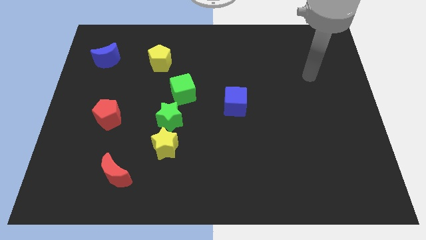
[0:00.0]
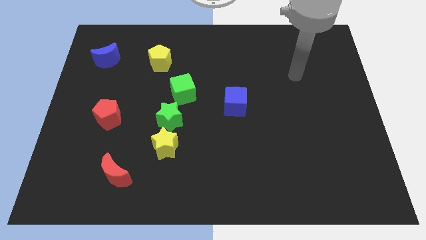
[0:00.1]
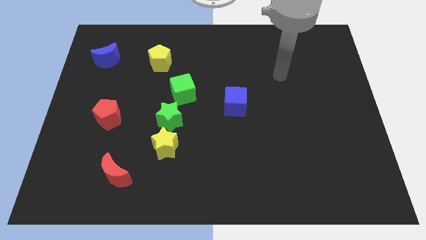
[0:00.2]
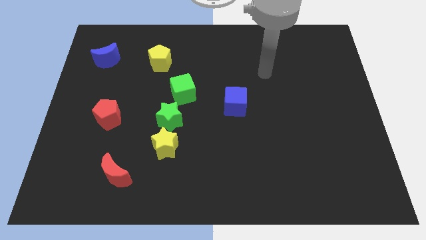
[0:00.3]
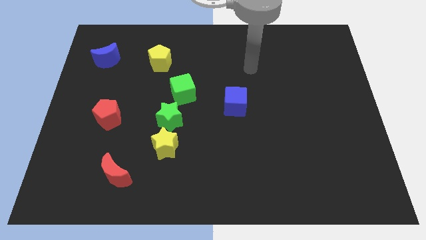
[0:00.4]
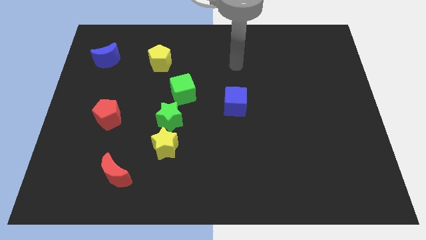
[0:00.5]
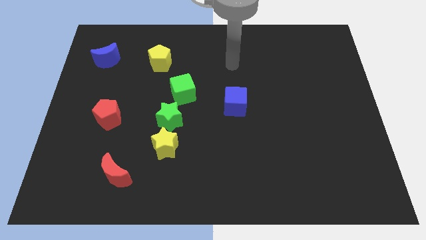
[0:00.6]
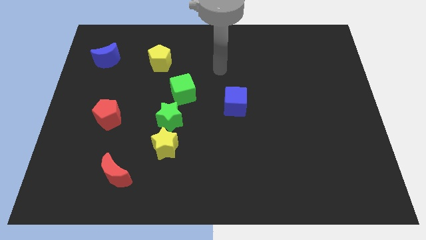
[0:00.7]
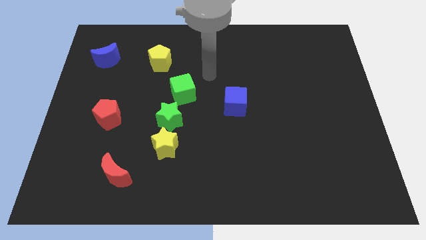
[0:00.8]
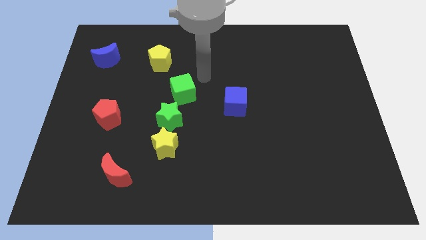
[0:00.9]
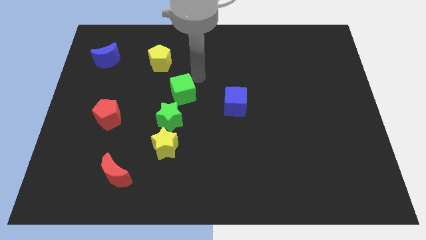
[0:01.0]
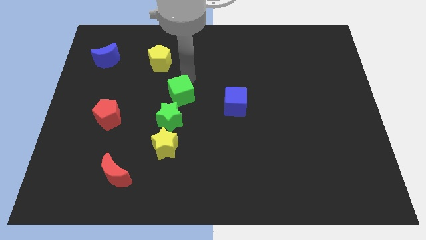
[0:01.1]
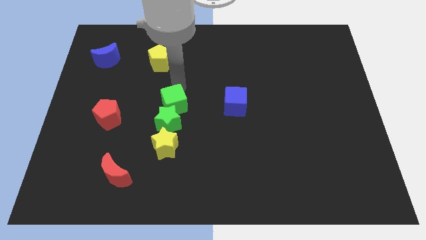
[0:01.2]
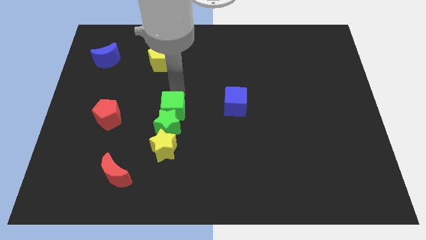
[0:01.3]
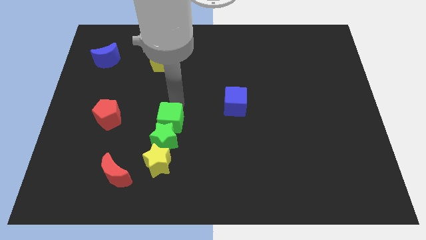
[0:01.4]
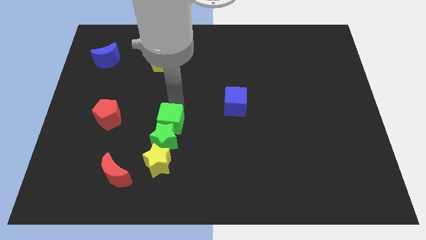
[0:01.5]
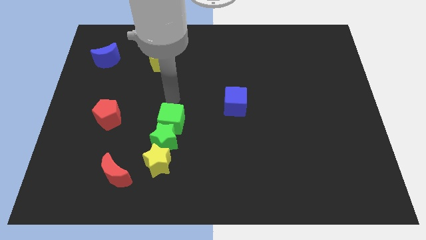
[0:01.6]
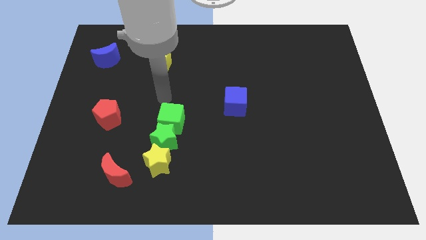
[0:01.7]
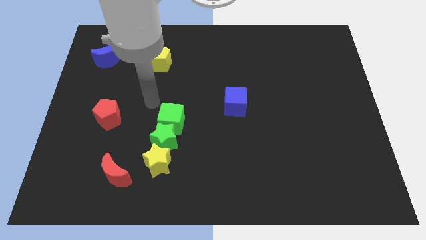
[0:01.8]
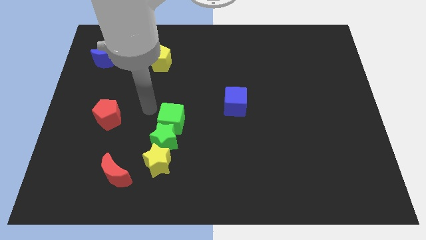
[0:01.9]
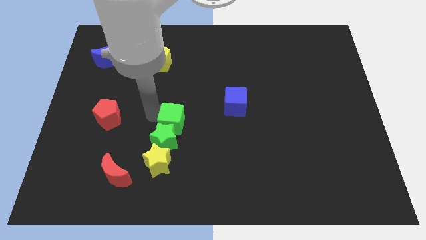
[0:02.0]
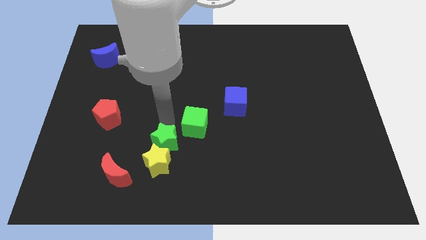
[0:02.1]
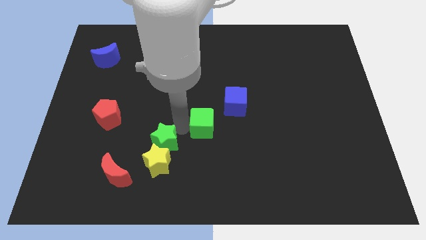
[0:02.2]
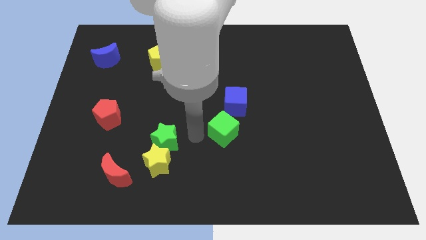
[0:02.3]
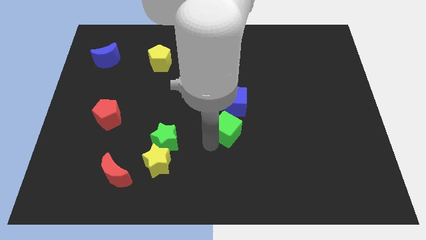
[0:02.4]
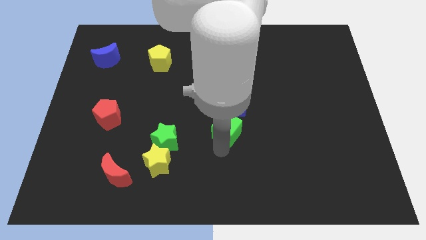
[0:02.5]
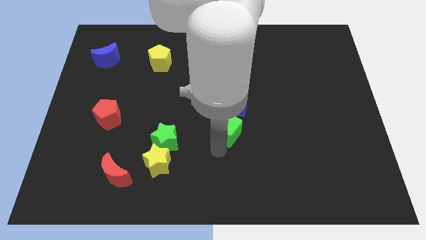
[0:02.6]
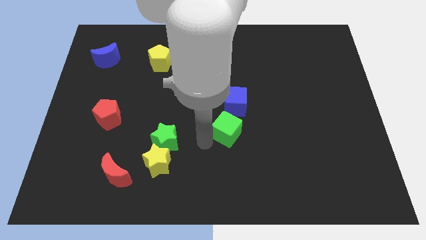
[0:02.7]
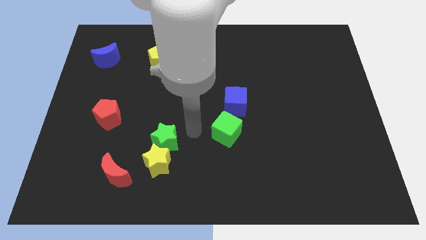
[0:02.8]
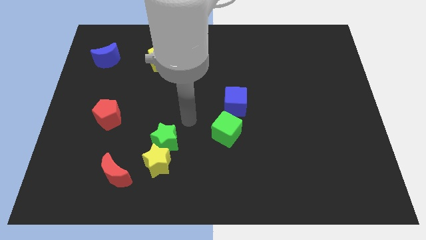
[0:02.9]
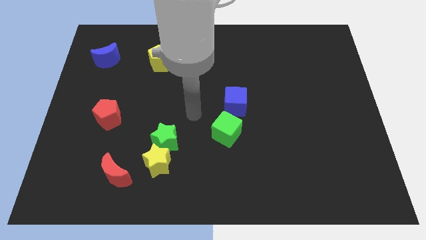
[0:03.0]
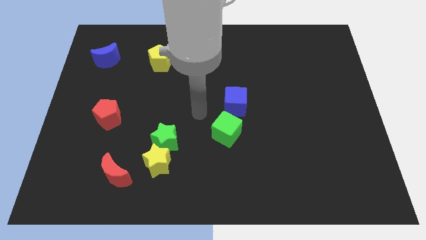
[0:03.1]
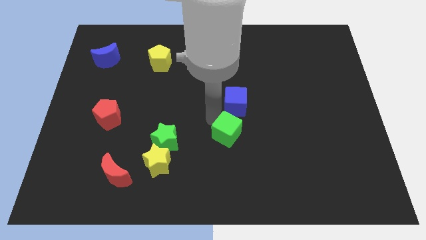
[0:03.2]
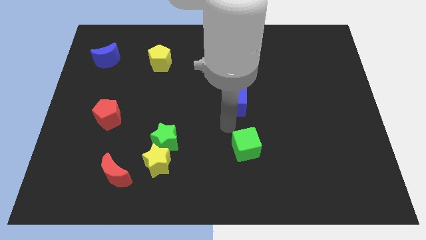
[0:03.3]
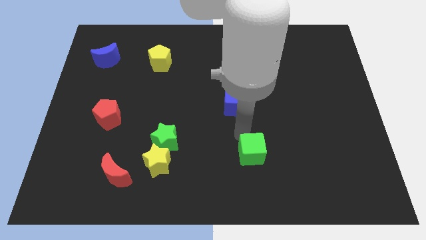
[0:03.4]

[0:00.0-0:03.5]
place the green cube below the blue cube

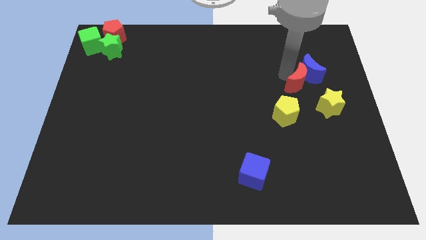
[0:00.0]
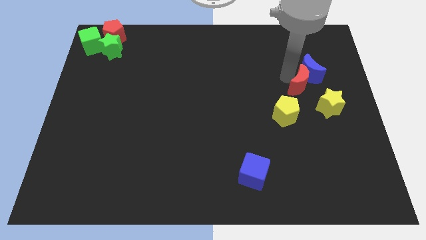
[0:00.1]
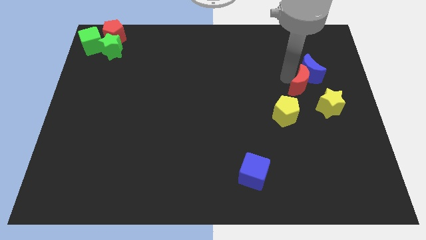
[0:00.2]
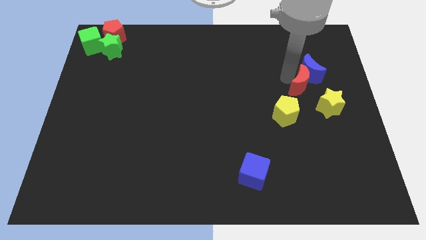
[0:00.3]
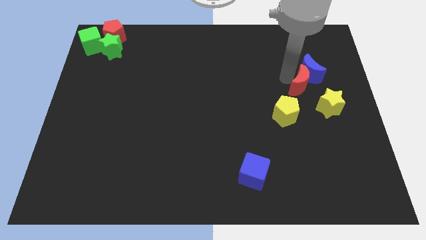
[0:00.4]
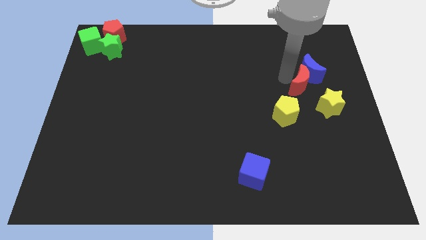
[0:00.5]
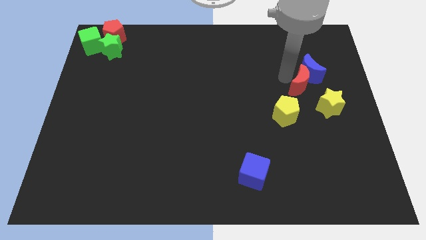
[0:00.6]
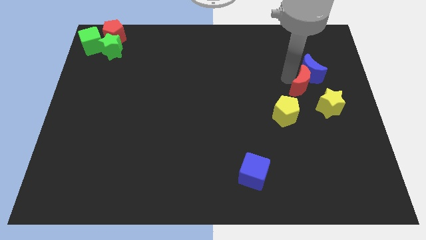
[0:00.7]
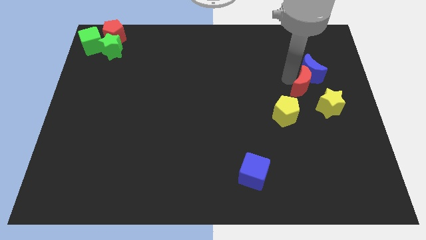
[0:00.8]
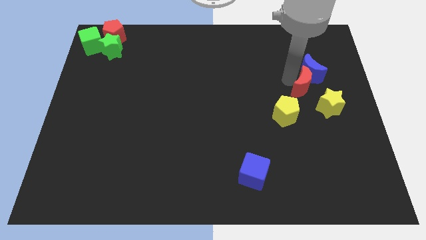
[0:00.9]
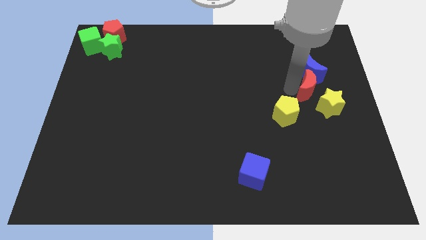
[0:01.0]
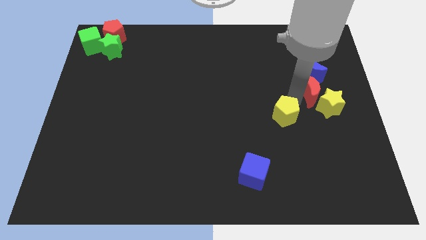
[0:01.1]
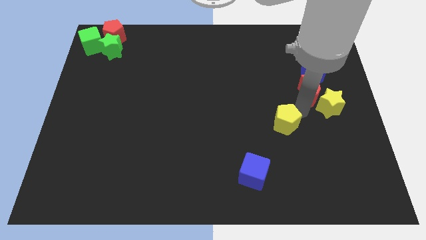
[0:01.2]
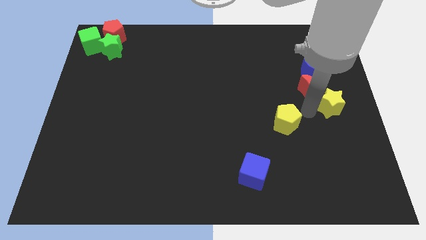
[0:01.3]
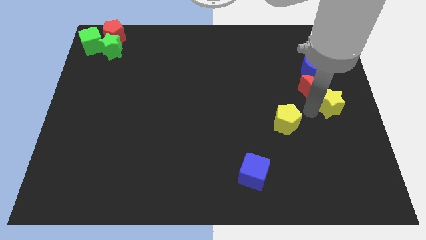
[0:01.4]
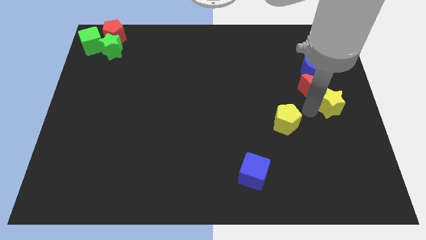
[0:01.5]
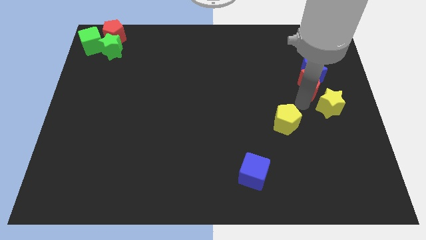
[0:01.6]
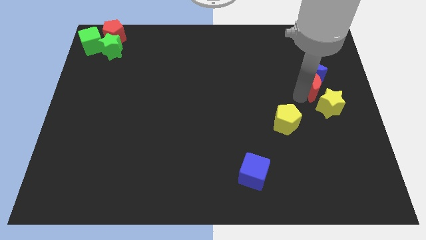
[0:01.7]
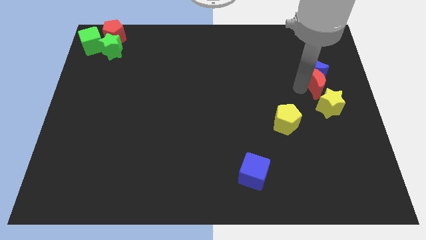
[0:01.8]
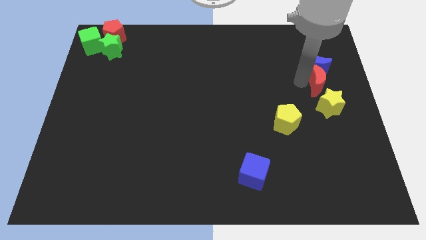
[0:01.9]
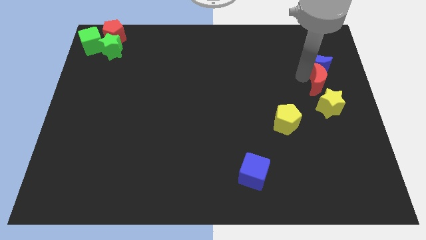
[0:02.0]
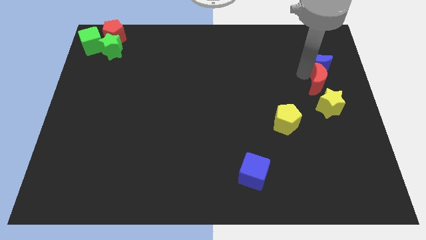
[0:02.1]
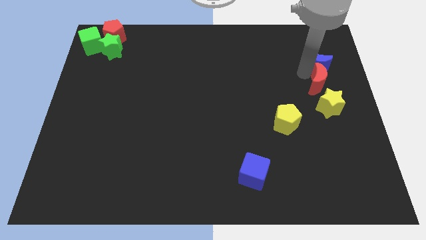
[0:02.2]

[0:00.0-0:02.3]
move red crescent towards the blue crescent

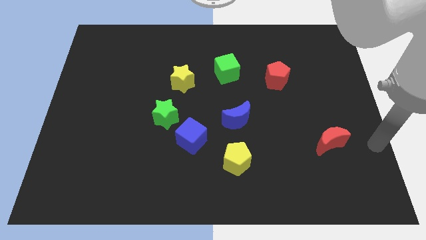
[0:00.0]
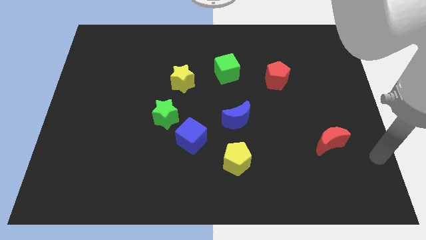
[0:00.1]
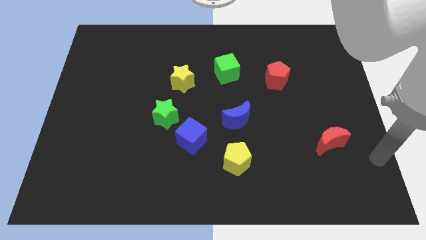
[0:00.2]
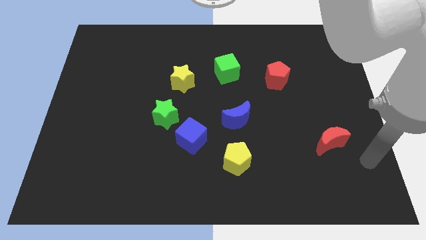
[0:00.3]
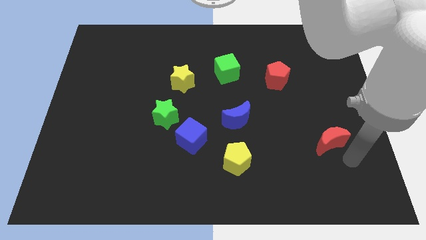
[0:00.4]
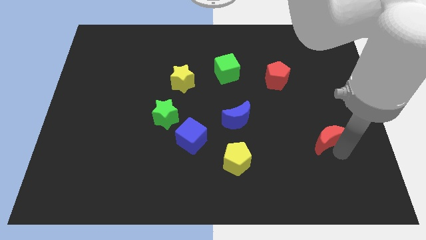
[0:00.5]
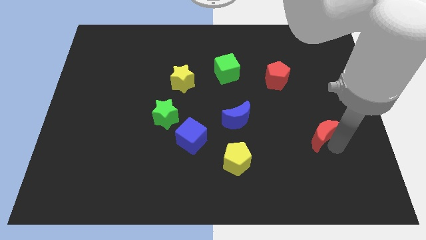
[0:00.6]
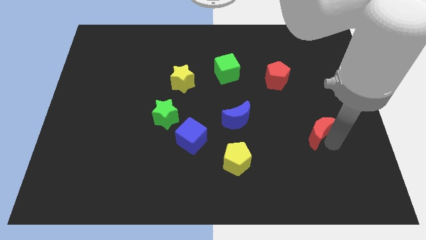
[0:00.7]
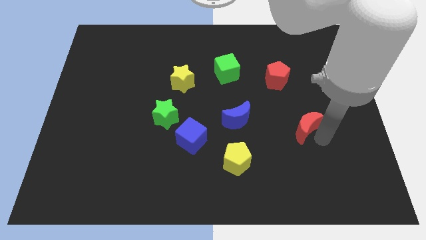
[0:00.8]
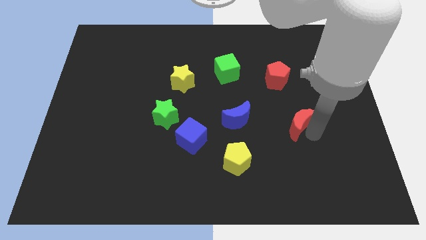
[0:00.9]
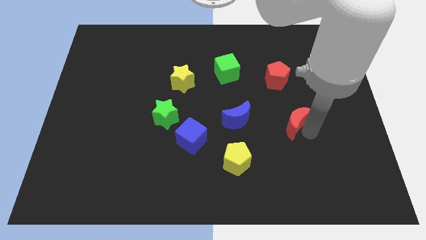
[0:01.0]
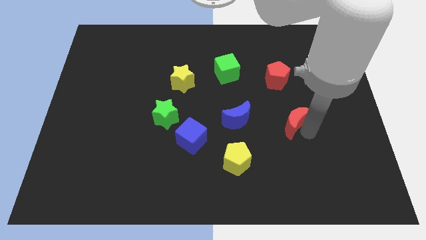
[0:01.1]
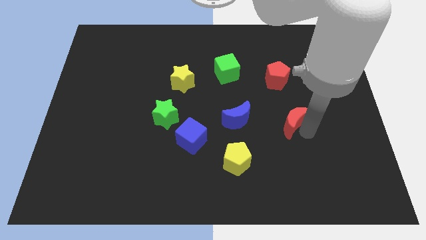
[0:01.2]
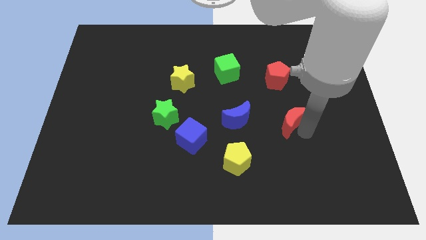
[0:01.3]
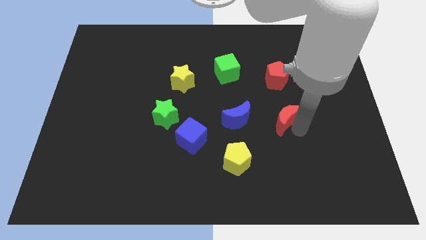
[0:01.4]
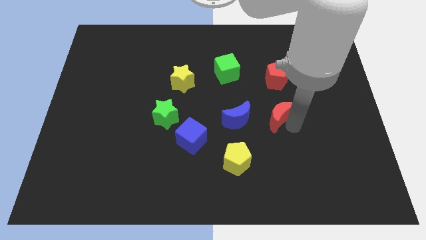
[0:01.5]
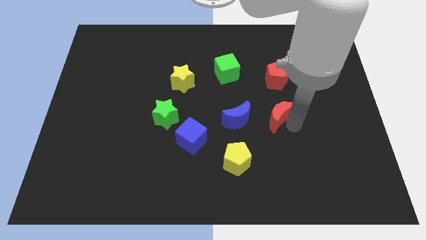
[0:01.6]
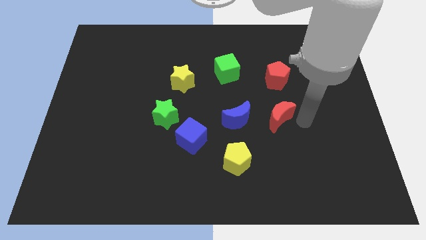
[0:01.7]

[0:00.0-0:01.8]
push the red moon at the right side of the blue moon

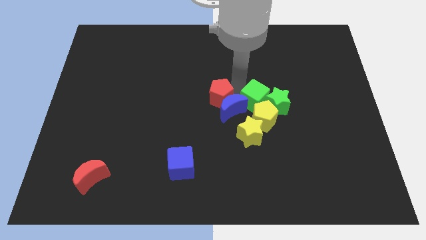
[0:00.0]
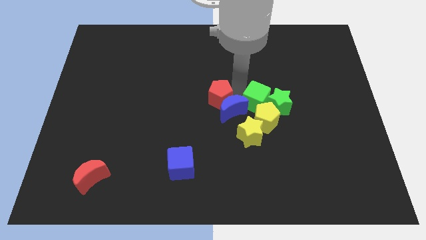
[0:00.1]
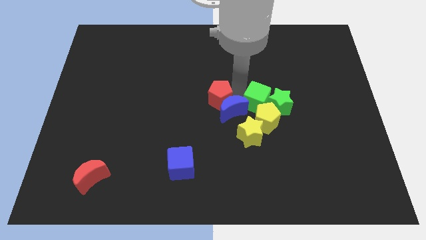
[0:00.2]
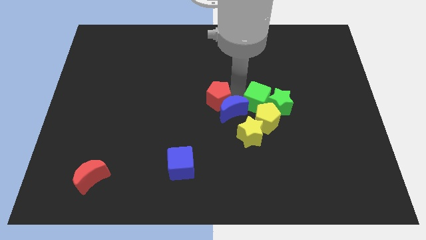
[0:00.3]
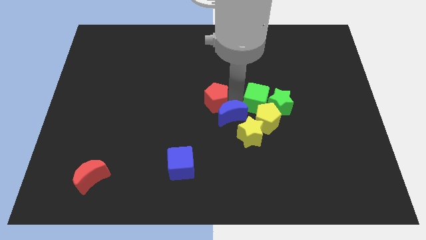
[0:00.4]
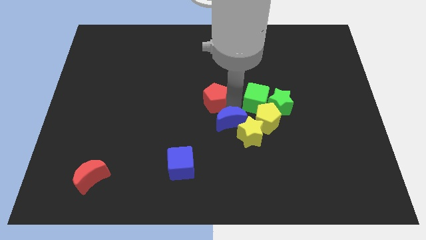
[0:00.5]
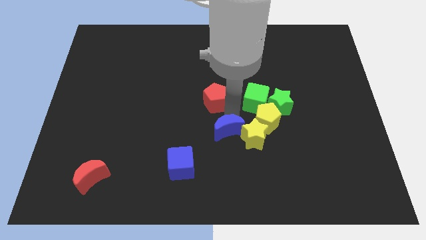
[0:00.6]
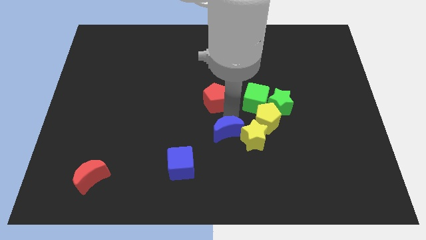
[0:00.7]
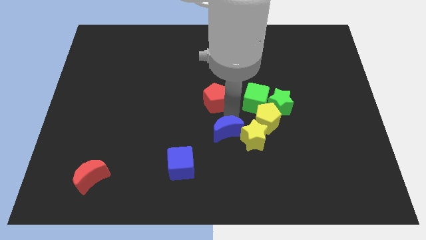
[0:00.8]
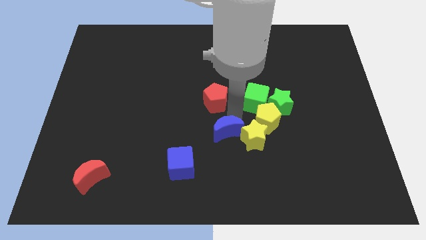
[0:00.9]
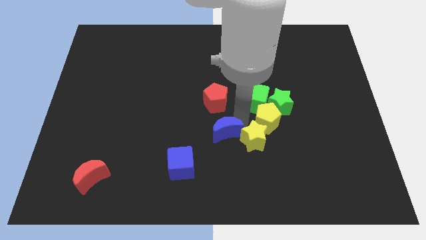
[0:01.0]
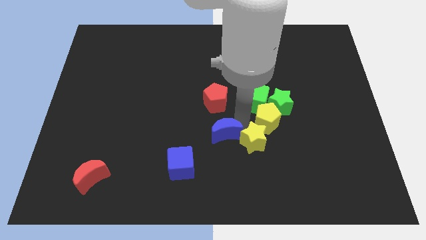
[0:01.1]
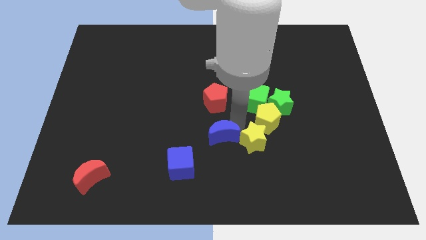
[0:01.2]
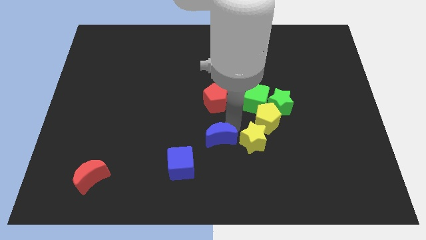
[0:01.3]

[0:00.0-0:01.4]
separate the blue moon from red pentagon

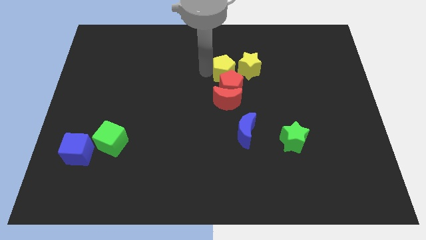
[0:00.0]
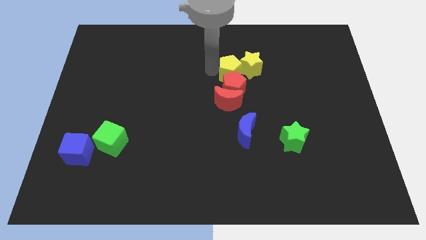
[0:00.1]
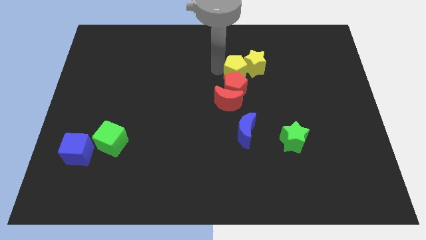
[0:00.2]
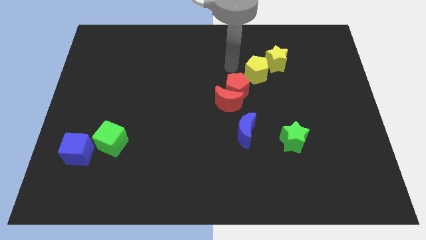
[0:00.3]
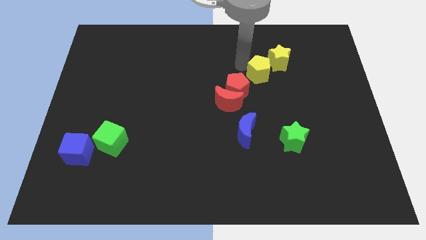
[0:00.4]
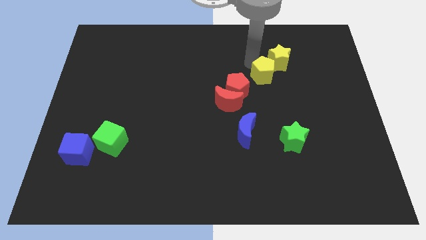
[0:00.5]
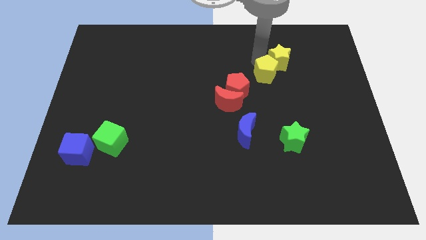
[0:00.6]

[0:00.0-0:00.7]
make a diagonal line with red and yellow blocks
